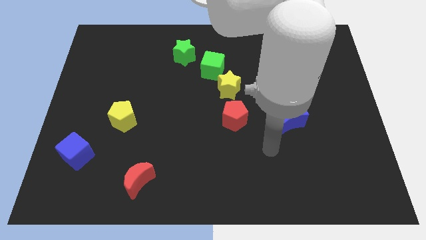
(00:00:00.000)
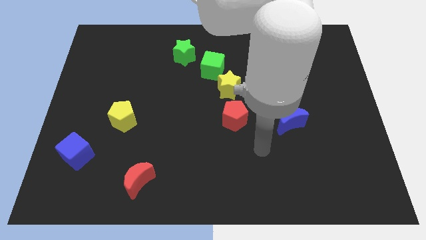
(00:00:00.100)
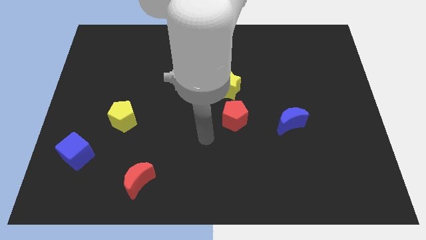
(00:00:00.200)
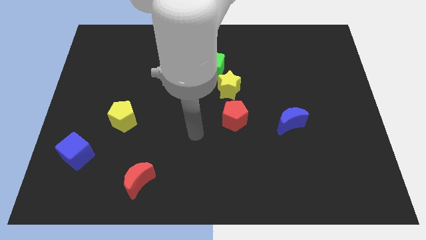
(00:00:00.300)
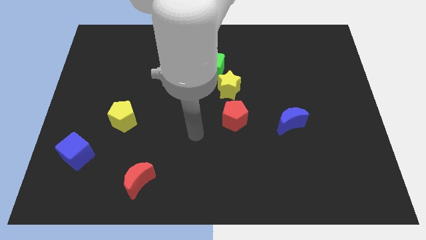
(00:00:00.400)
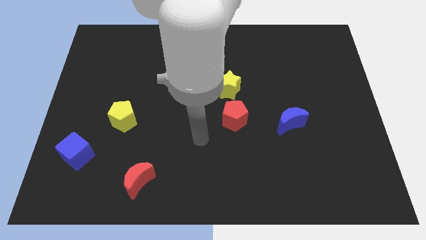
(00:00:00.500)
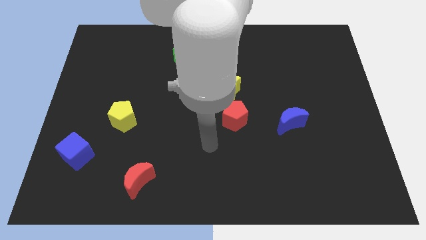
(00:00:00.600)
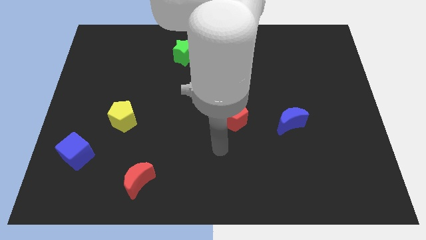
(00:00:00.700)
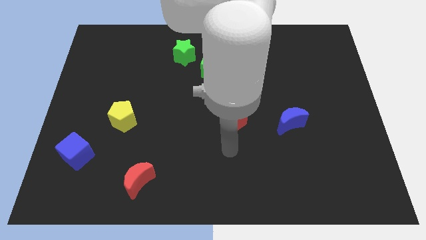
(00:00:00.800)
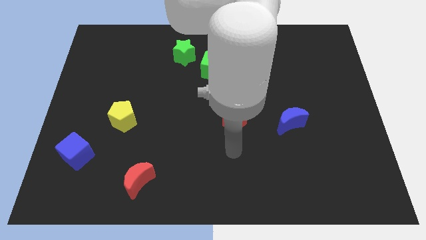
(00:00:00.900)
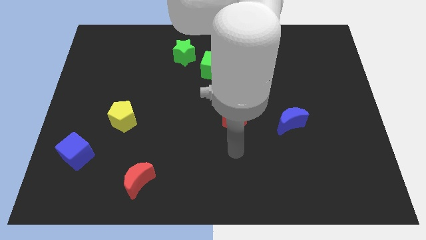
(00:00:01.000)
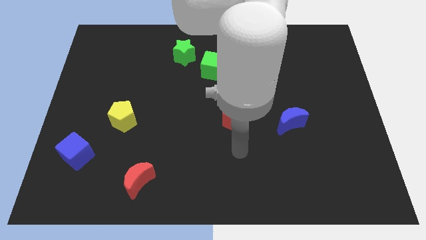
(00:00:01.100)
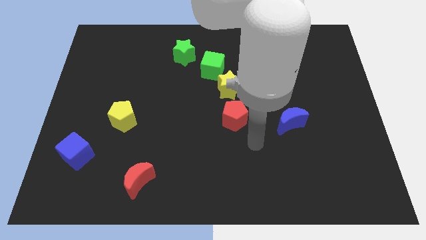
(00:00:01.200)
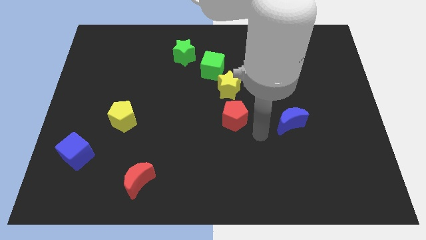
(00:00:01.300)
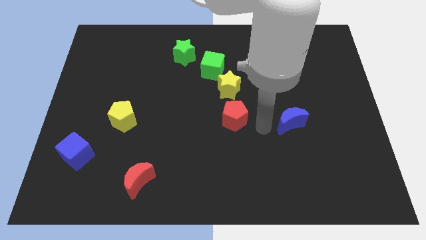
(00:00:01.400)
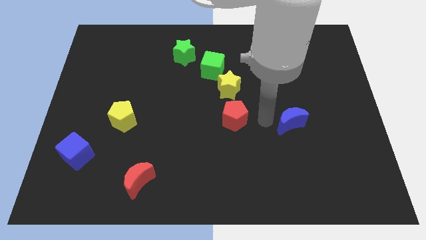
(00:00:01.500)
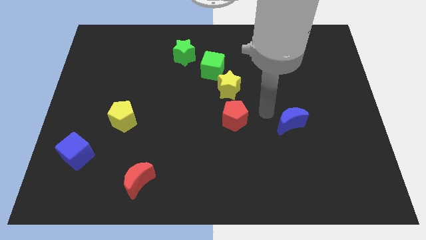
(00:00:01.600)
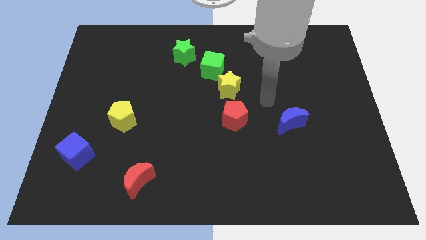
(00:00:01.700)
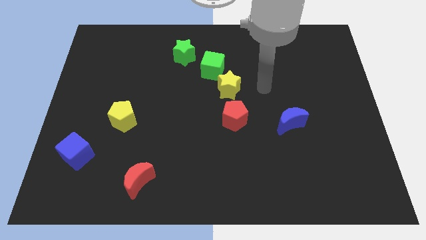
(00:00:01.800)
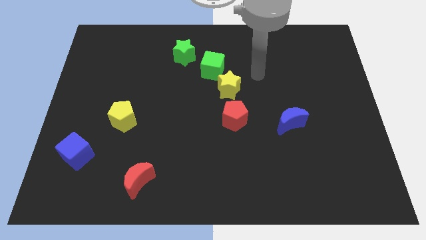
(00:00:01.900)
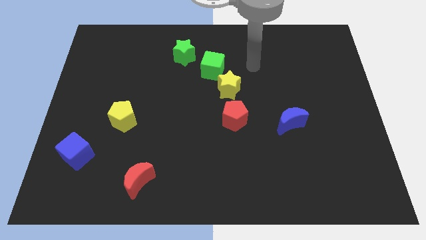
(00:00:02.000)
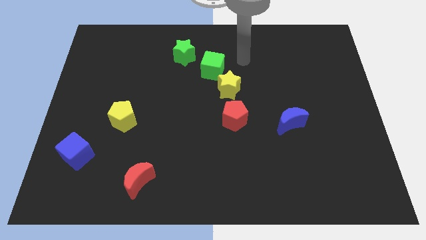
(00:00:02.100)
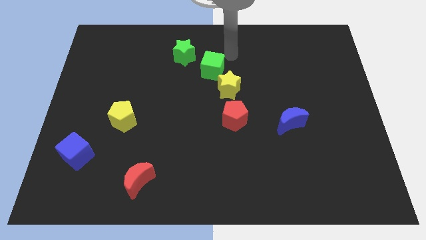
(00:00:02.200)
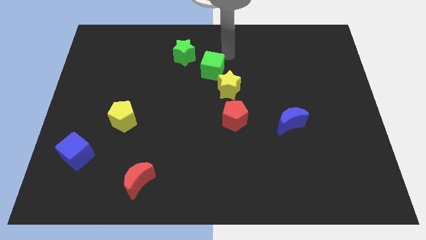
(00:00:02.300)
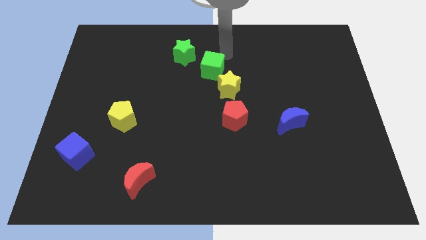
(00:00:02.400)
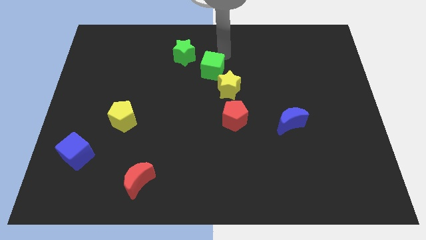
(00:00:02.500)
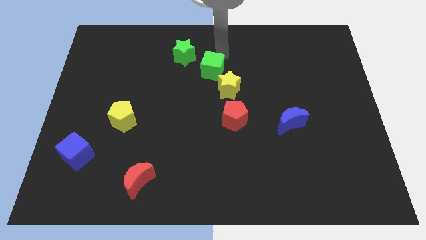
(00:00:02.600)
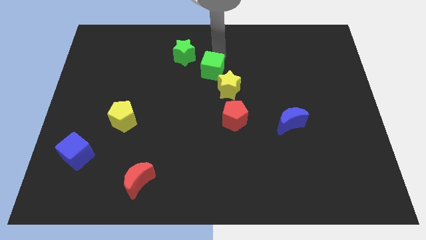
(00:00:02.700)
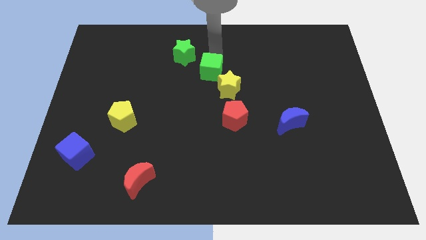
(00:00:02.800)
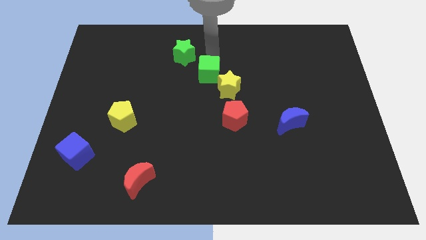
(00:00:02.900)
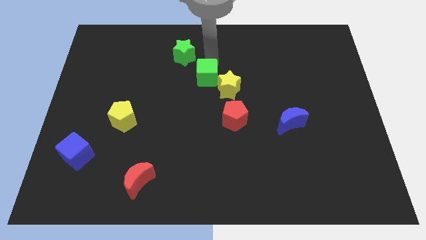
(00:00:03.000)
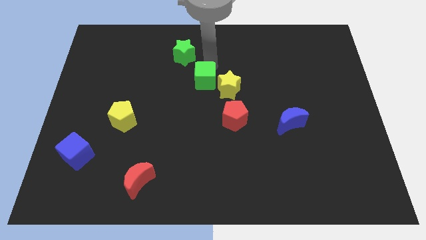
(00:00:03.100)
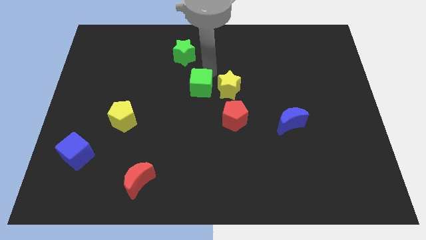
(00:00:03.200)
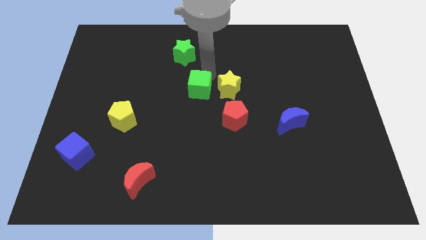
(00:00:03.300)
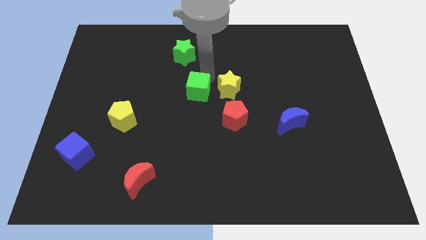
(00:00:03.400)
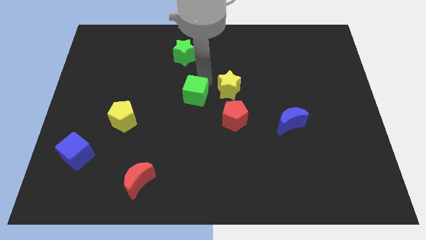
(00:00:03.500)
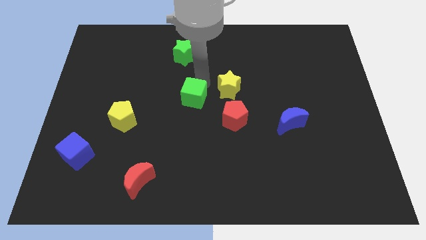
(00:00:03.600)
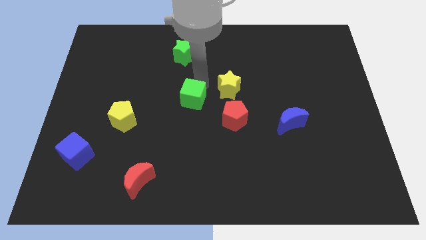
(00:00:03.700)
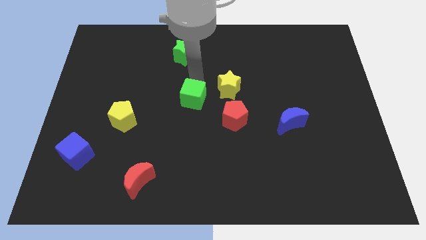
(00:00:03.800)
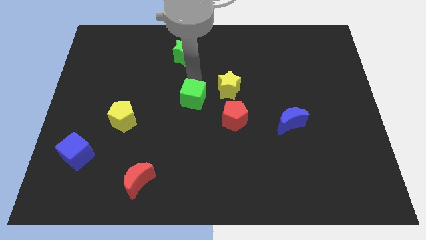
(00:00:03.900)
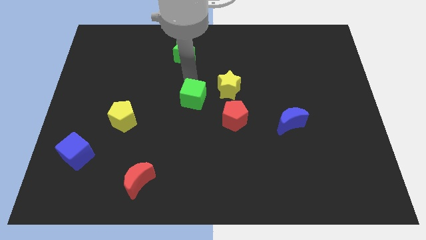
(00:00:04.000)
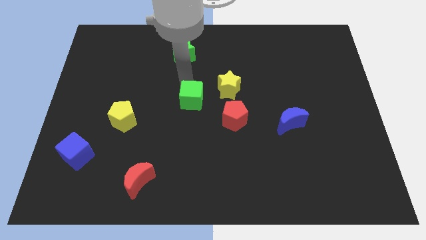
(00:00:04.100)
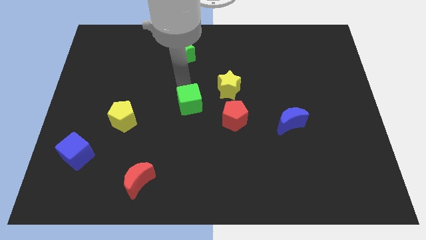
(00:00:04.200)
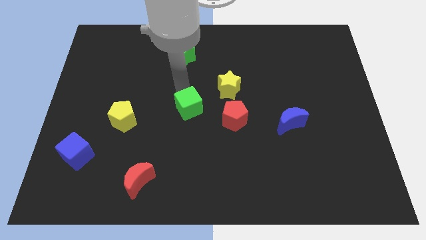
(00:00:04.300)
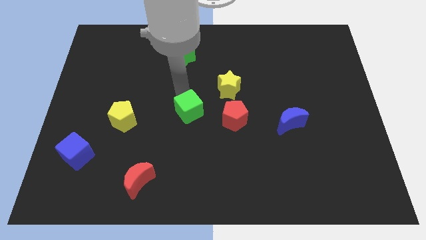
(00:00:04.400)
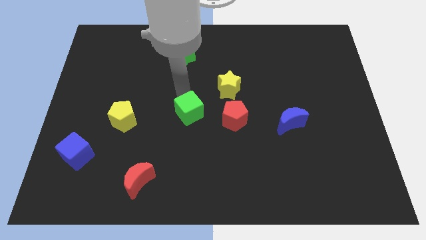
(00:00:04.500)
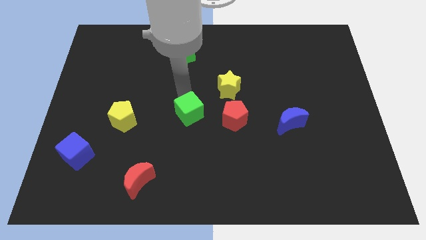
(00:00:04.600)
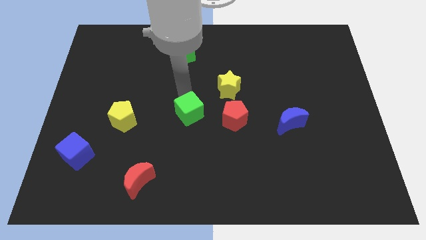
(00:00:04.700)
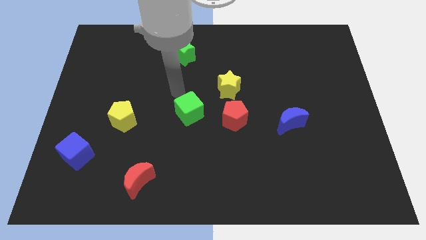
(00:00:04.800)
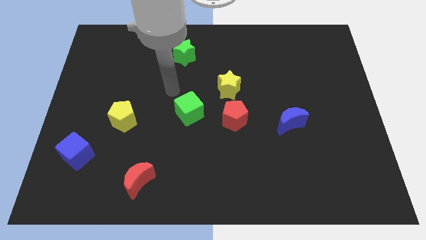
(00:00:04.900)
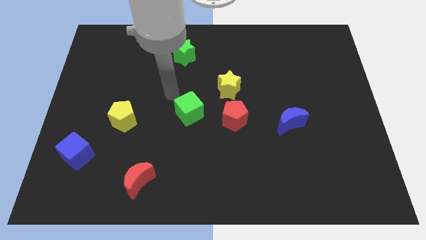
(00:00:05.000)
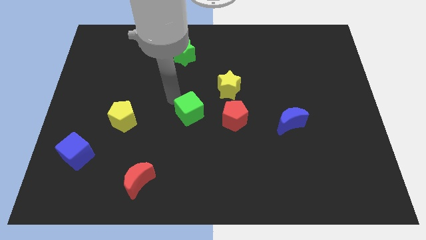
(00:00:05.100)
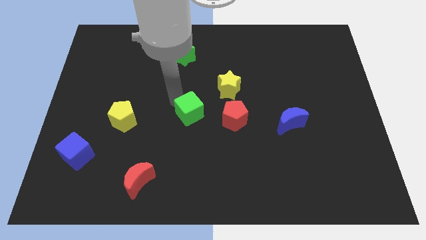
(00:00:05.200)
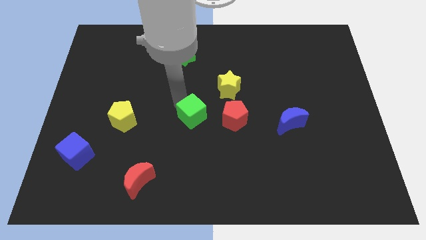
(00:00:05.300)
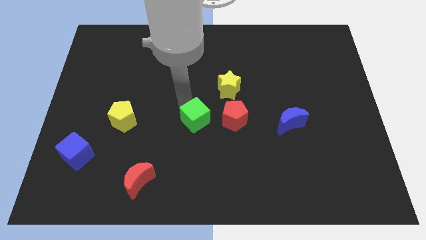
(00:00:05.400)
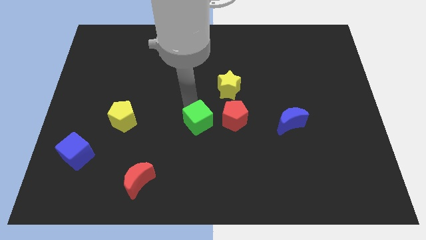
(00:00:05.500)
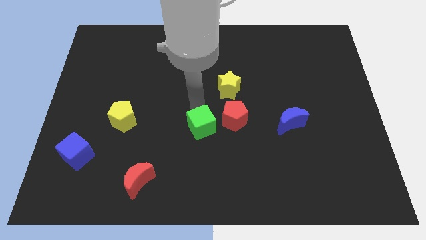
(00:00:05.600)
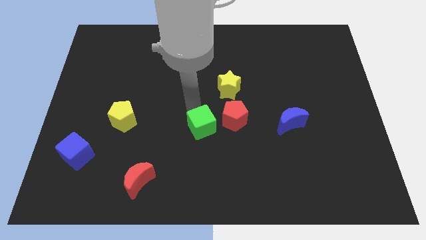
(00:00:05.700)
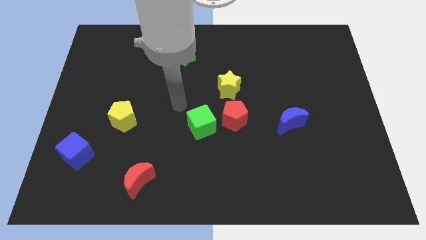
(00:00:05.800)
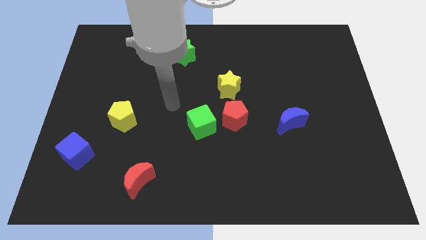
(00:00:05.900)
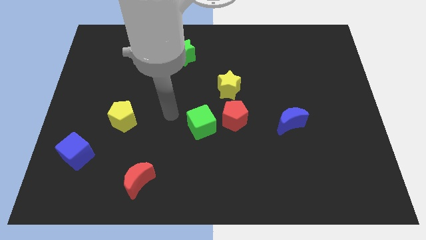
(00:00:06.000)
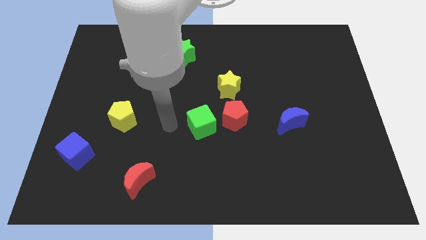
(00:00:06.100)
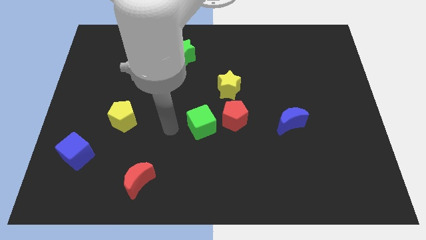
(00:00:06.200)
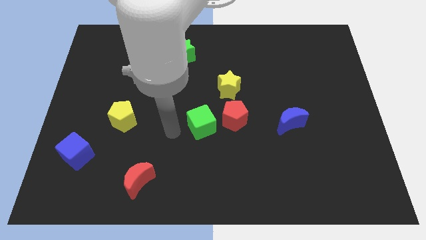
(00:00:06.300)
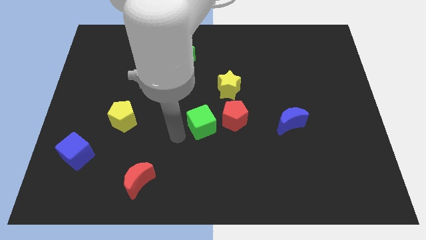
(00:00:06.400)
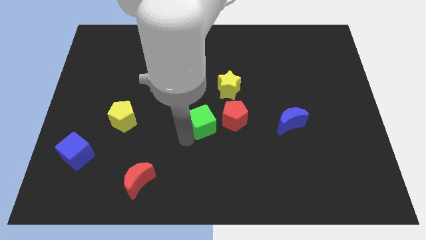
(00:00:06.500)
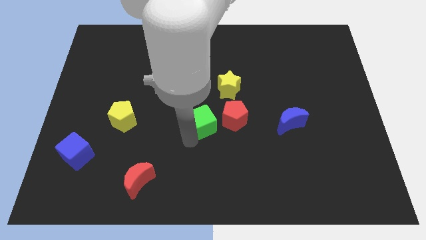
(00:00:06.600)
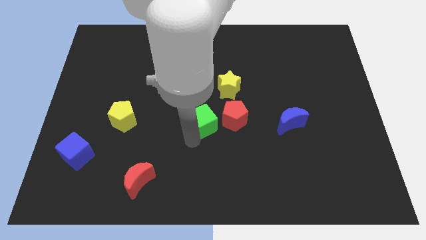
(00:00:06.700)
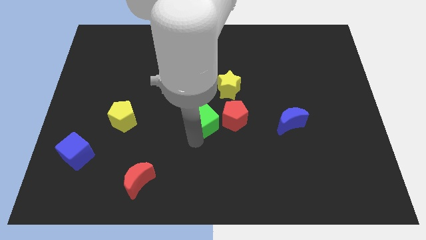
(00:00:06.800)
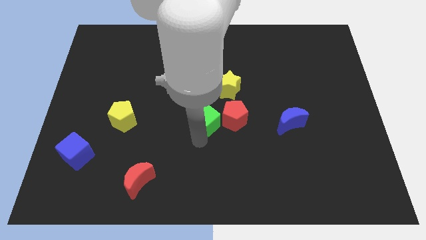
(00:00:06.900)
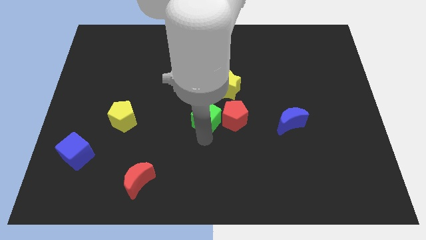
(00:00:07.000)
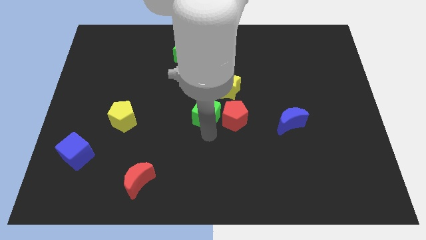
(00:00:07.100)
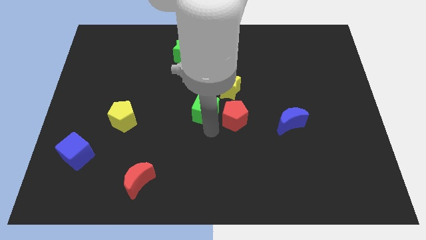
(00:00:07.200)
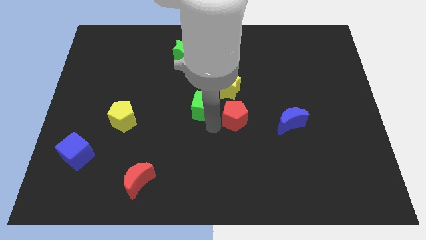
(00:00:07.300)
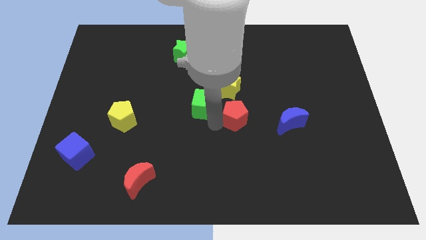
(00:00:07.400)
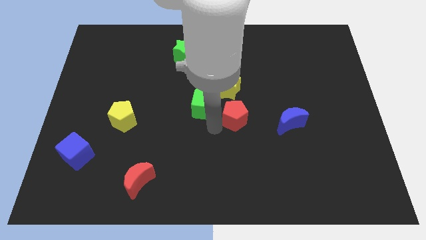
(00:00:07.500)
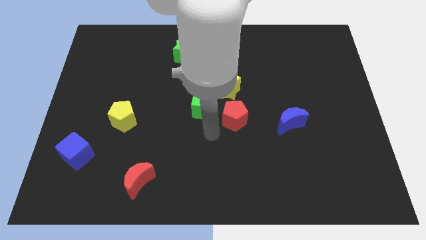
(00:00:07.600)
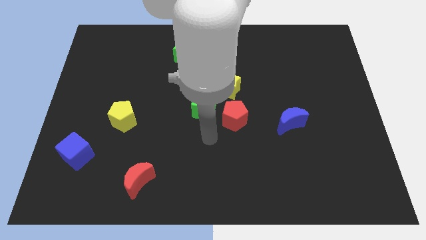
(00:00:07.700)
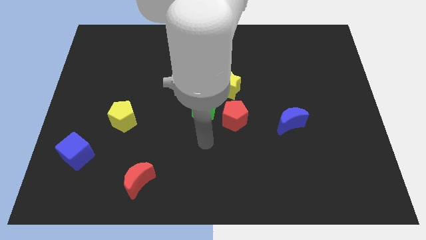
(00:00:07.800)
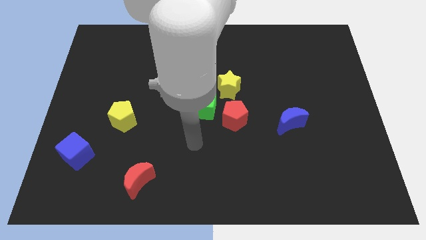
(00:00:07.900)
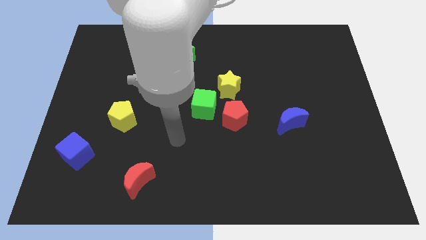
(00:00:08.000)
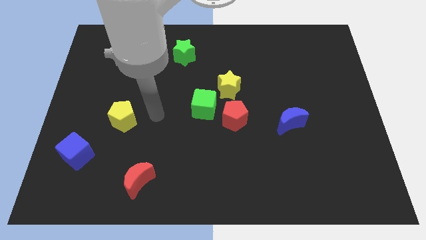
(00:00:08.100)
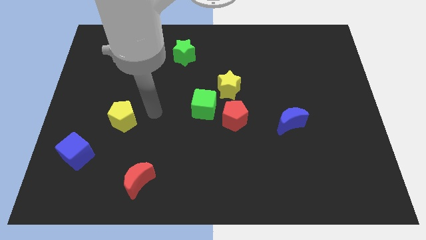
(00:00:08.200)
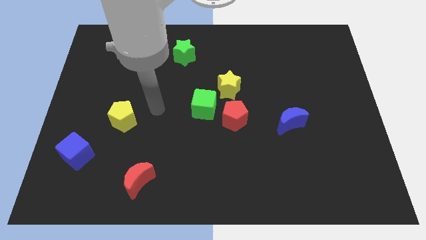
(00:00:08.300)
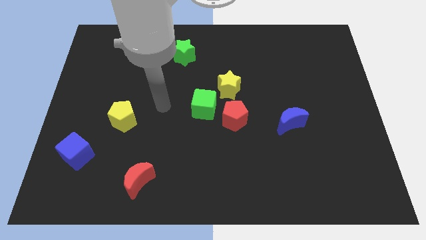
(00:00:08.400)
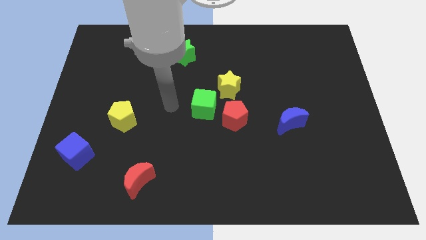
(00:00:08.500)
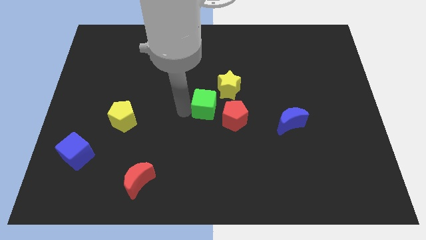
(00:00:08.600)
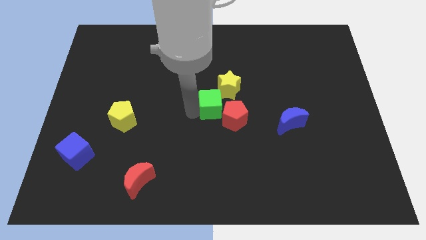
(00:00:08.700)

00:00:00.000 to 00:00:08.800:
slide the green cube next to the red pentagon
